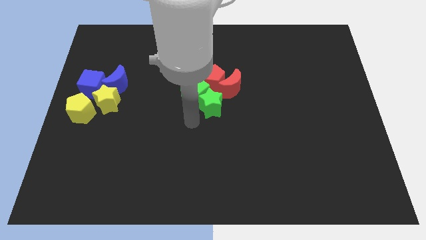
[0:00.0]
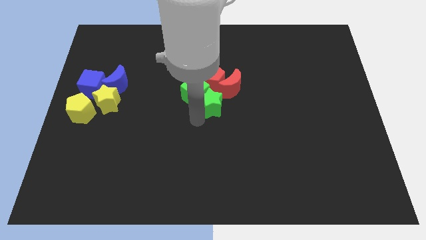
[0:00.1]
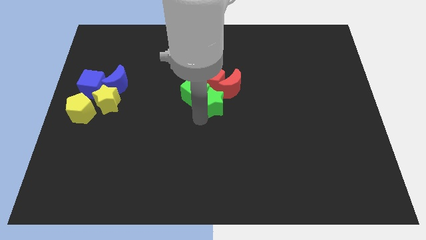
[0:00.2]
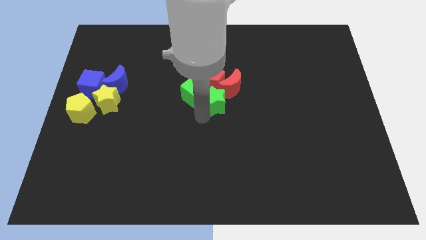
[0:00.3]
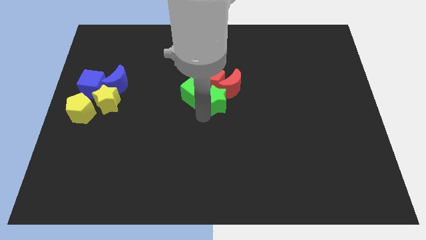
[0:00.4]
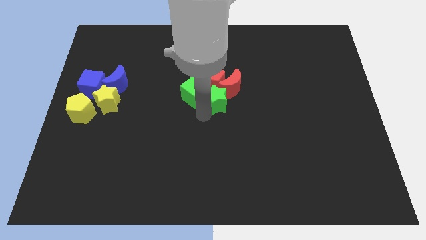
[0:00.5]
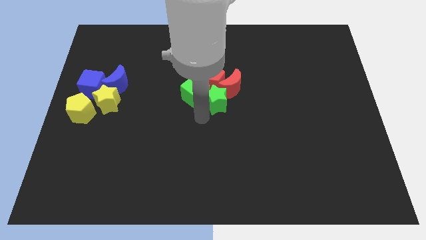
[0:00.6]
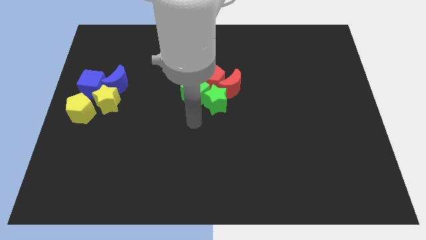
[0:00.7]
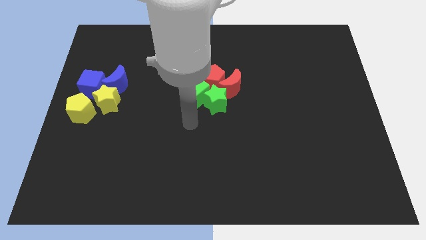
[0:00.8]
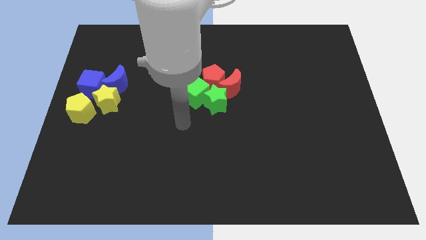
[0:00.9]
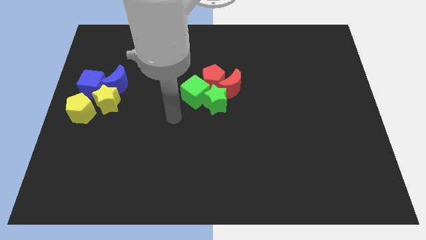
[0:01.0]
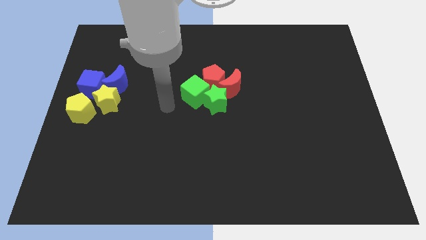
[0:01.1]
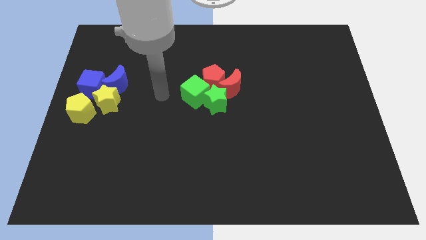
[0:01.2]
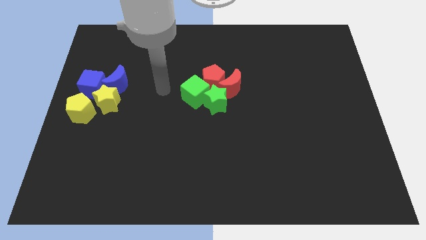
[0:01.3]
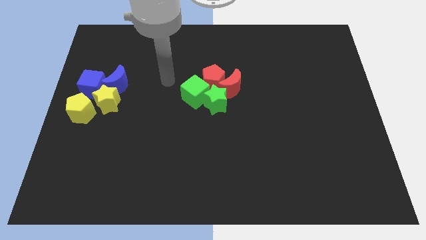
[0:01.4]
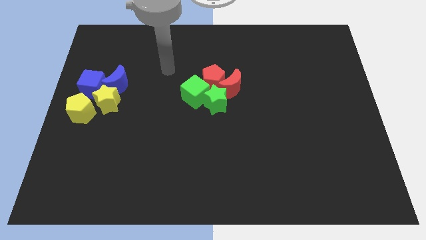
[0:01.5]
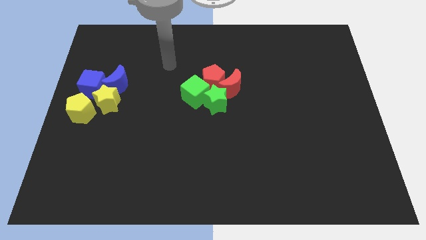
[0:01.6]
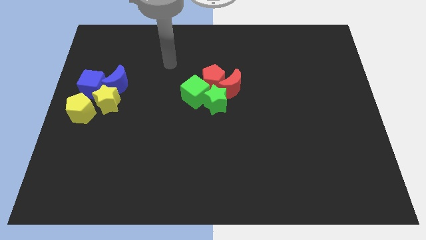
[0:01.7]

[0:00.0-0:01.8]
place the green star to the bottom left to the red crescent

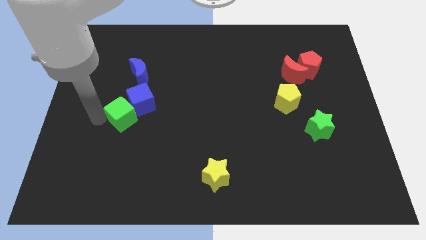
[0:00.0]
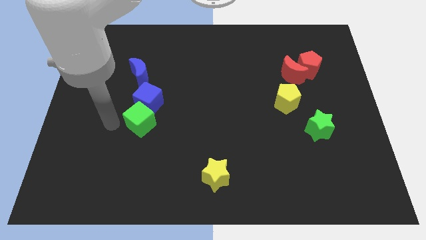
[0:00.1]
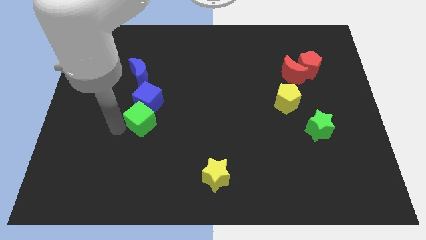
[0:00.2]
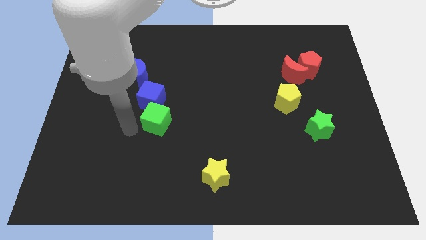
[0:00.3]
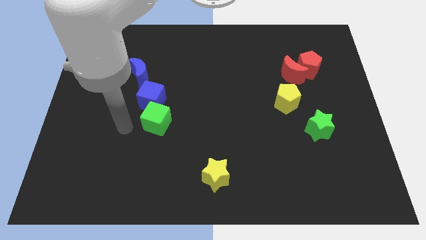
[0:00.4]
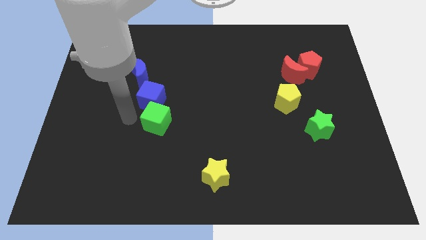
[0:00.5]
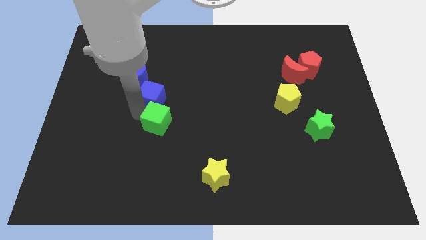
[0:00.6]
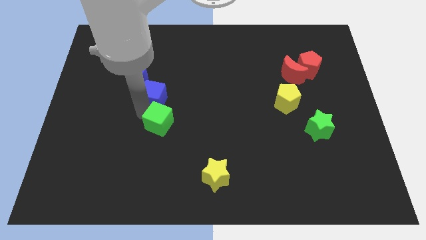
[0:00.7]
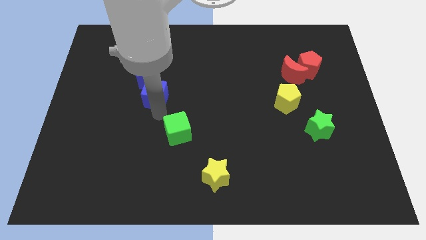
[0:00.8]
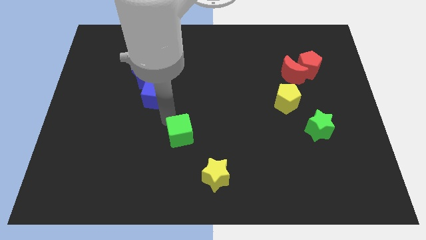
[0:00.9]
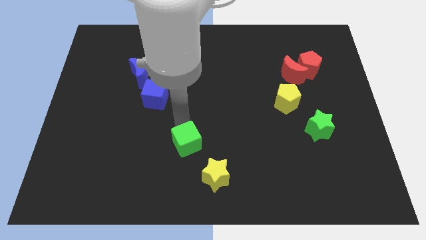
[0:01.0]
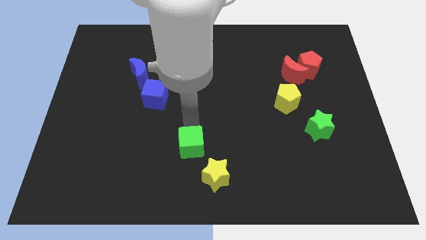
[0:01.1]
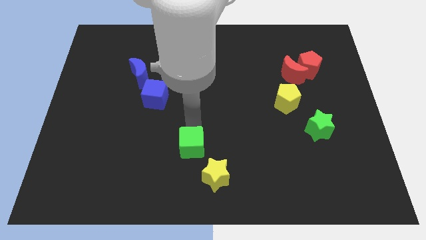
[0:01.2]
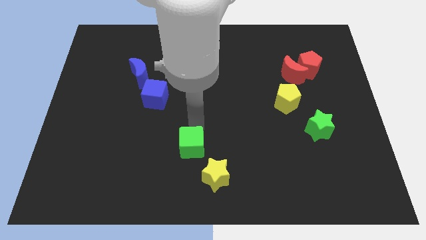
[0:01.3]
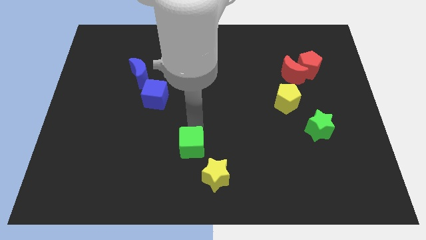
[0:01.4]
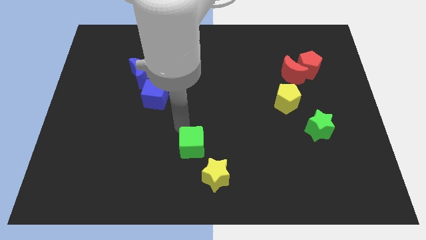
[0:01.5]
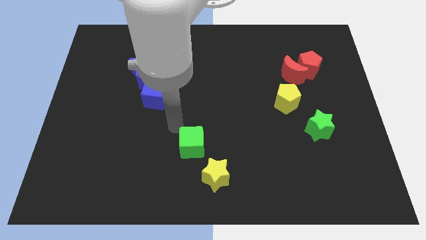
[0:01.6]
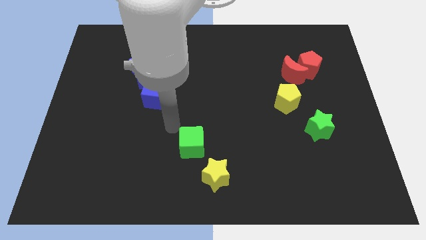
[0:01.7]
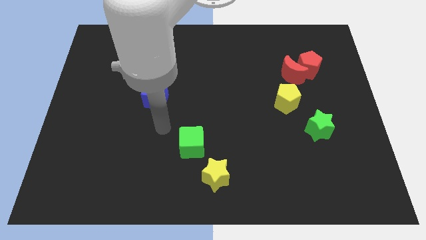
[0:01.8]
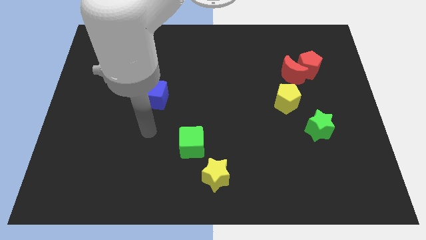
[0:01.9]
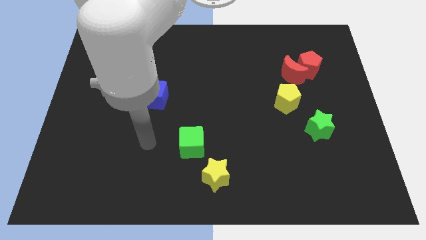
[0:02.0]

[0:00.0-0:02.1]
slide the green cube towards the top left of the yellow star

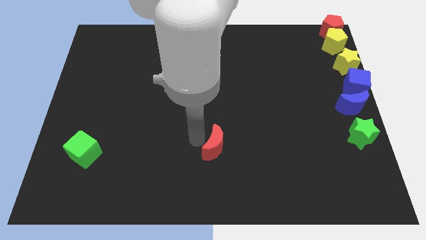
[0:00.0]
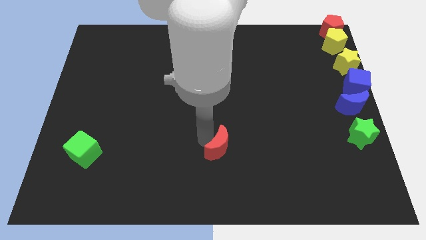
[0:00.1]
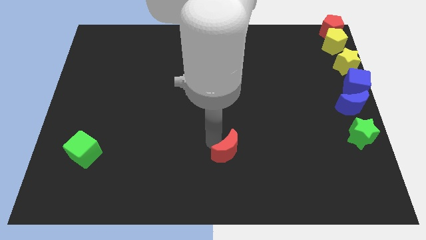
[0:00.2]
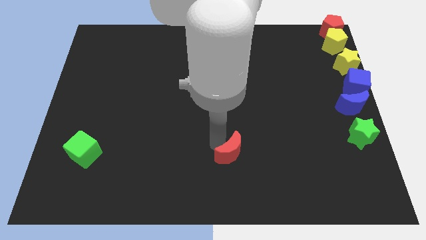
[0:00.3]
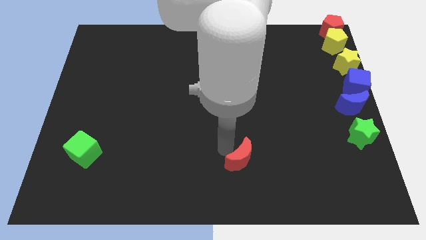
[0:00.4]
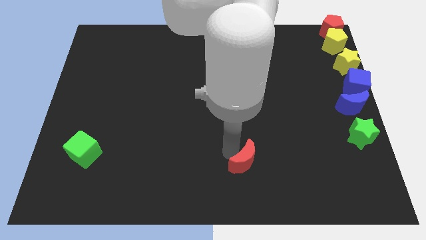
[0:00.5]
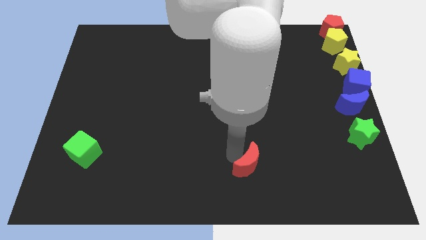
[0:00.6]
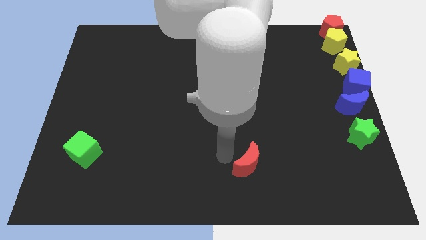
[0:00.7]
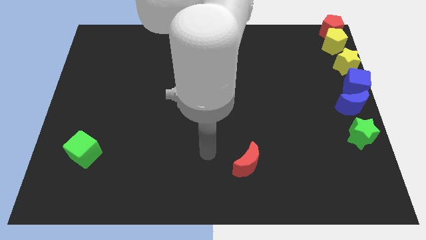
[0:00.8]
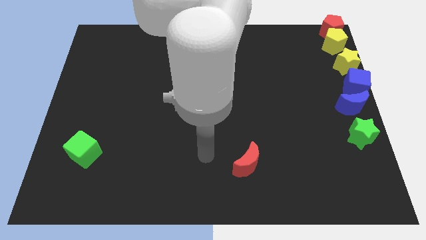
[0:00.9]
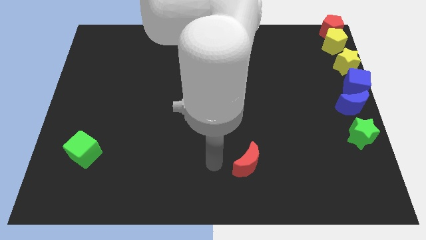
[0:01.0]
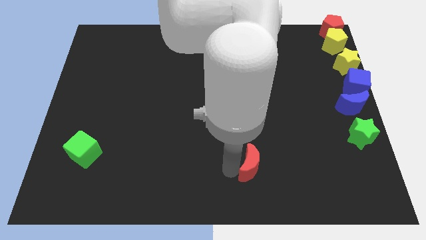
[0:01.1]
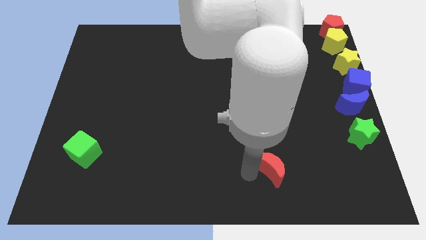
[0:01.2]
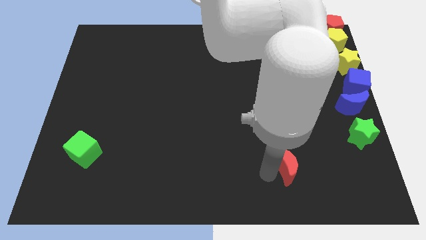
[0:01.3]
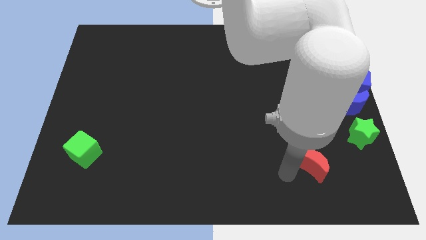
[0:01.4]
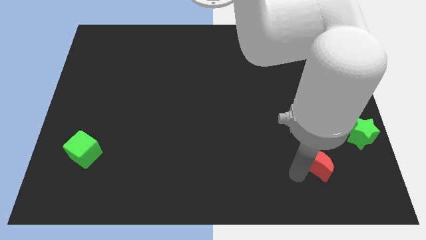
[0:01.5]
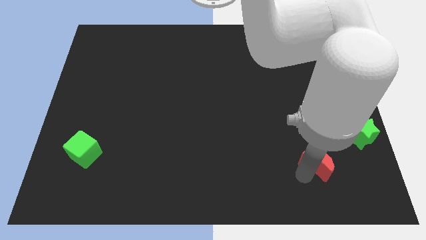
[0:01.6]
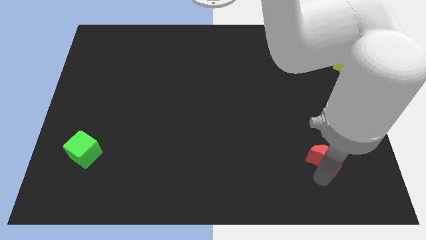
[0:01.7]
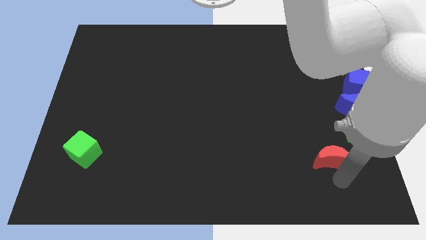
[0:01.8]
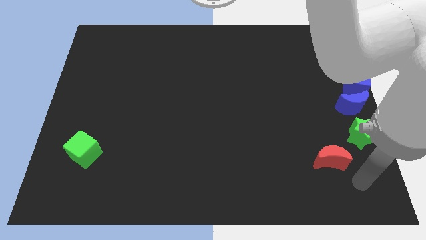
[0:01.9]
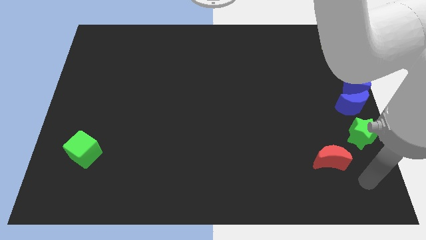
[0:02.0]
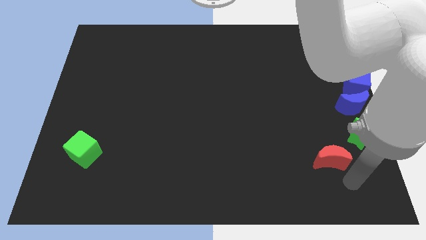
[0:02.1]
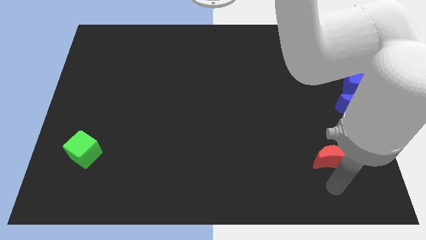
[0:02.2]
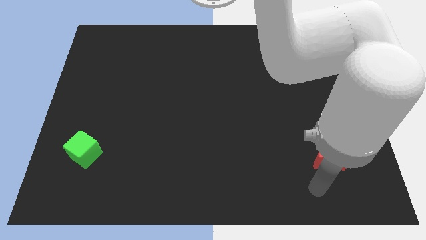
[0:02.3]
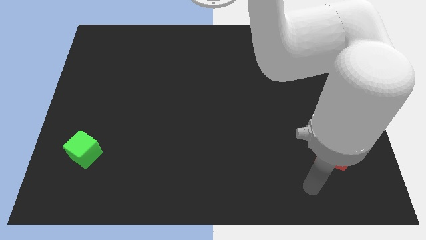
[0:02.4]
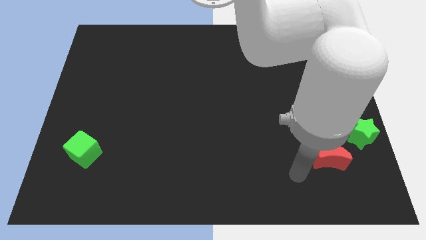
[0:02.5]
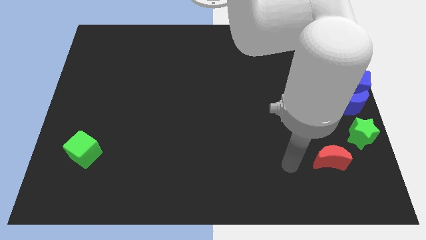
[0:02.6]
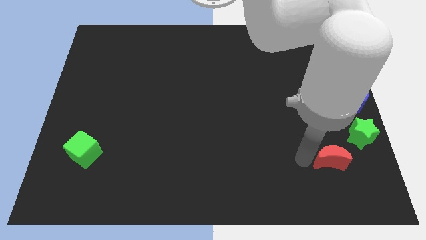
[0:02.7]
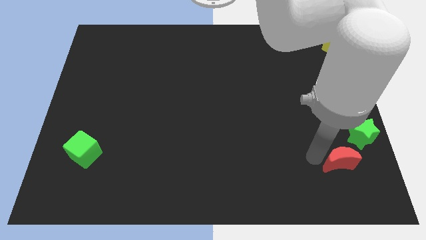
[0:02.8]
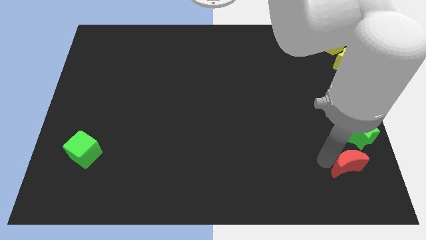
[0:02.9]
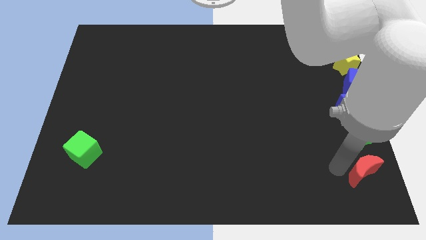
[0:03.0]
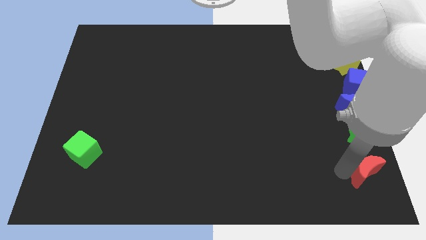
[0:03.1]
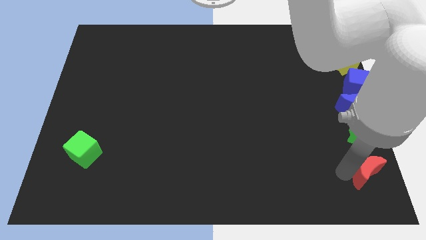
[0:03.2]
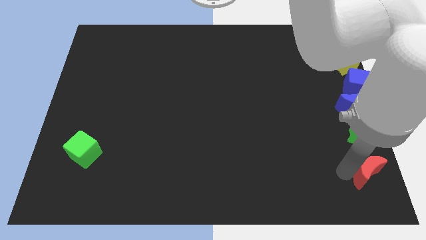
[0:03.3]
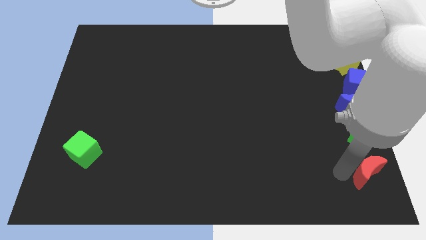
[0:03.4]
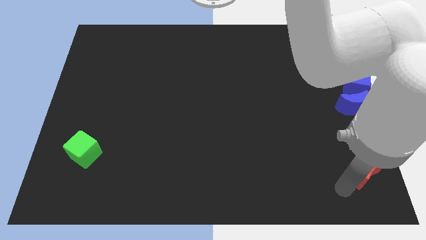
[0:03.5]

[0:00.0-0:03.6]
place the red crescent under the green star

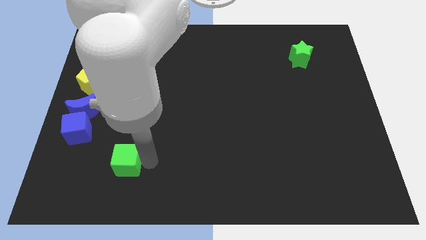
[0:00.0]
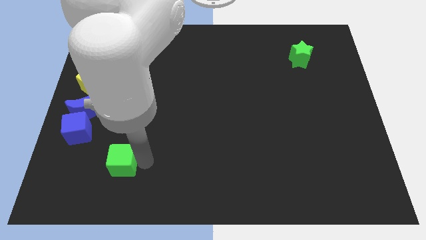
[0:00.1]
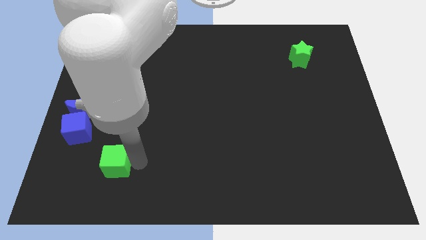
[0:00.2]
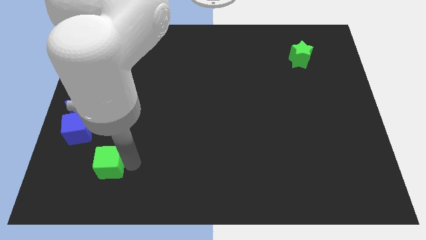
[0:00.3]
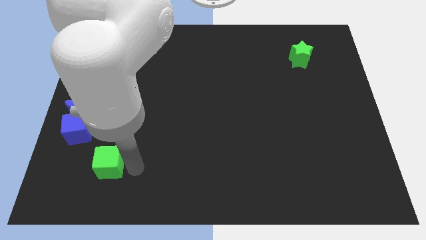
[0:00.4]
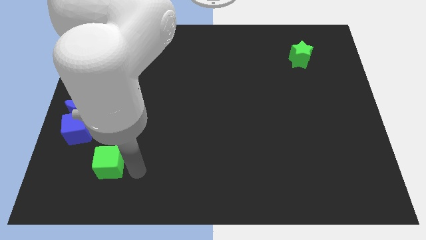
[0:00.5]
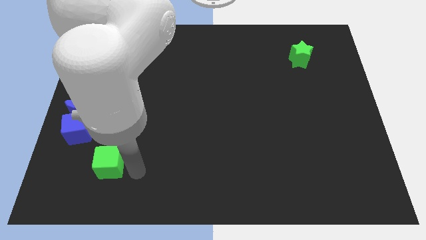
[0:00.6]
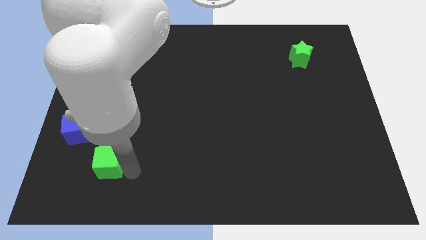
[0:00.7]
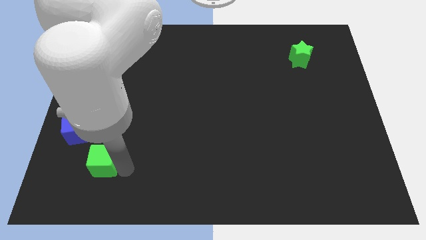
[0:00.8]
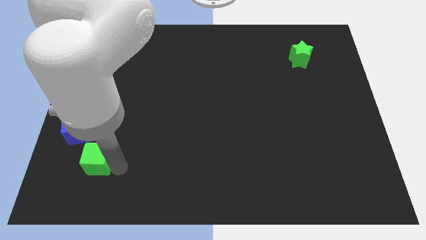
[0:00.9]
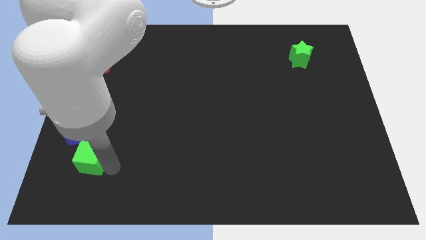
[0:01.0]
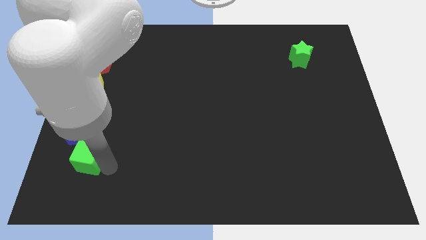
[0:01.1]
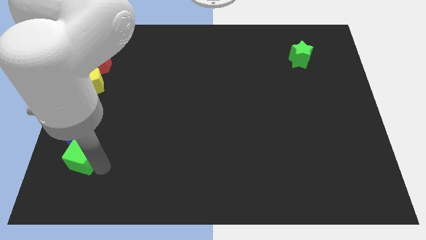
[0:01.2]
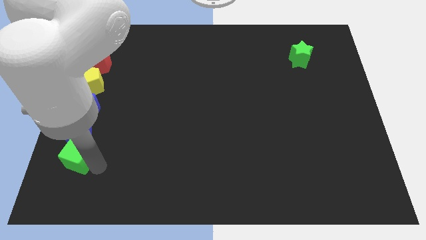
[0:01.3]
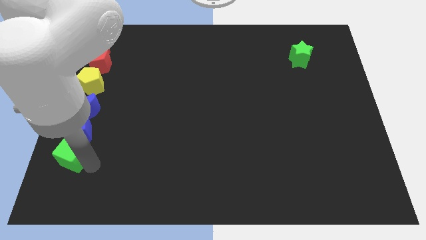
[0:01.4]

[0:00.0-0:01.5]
place green cube below blue cube
